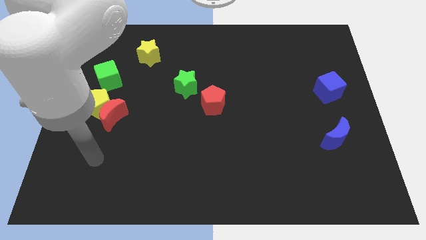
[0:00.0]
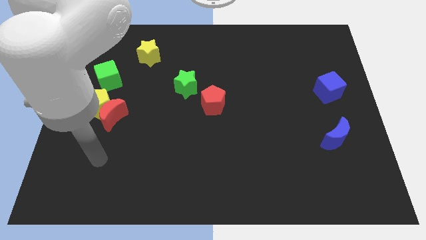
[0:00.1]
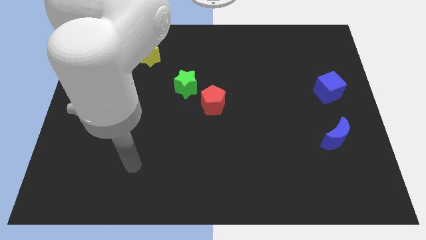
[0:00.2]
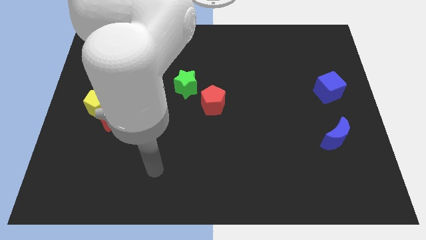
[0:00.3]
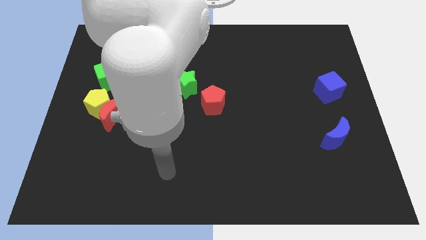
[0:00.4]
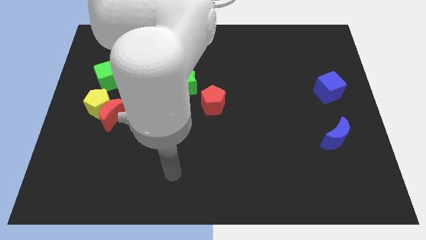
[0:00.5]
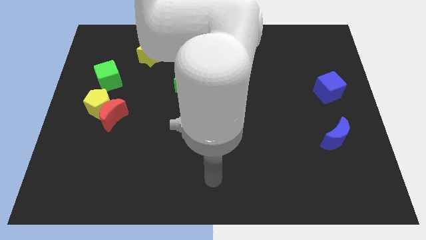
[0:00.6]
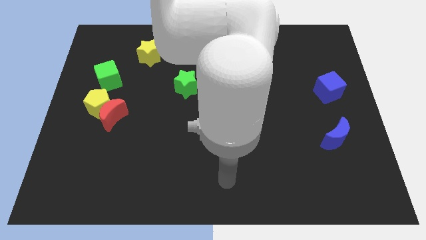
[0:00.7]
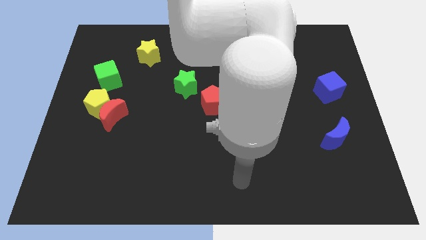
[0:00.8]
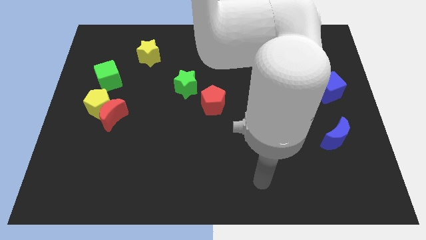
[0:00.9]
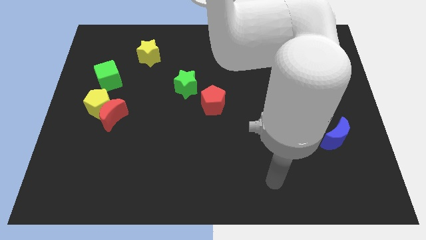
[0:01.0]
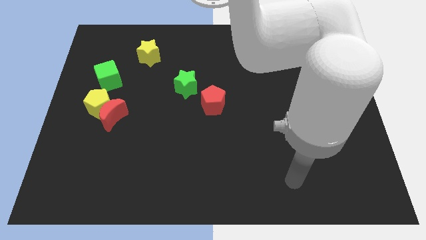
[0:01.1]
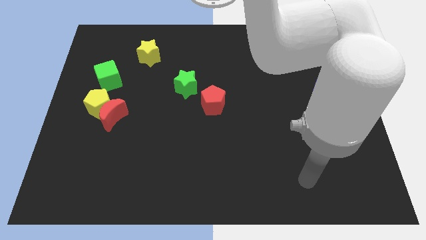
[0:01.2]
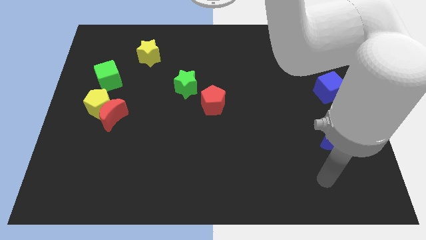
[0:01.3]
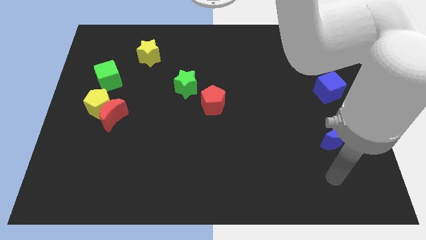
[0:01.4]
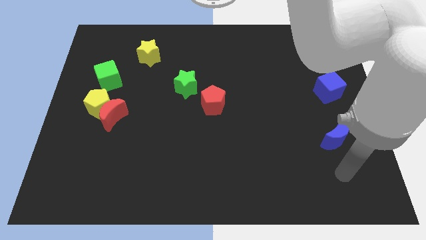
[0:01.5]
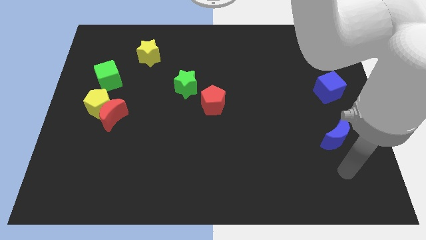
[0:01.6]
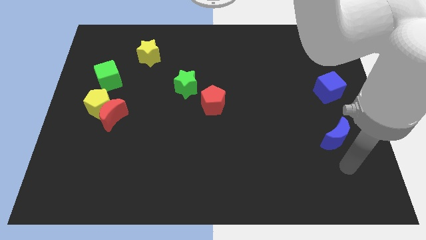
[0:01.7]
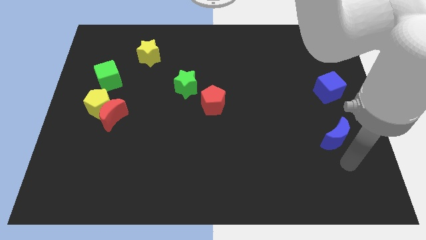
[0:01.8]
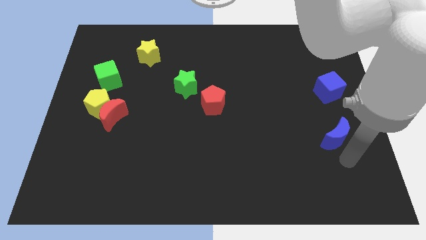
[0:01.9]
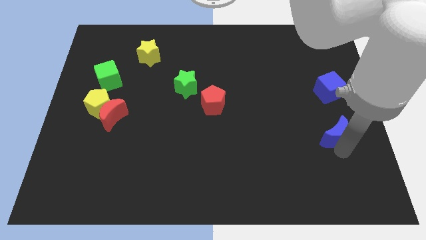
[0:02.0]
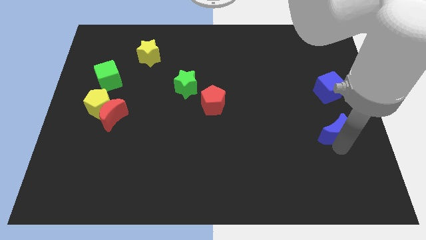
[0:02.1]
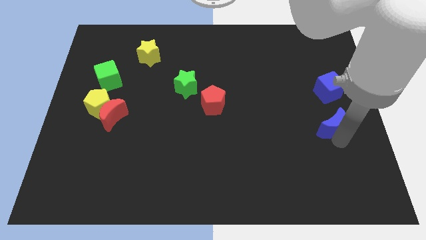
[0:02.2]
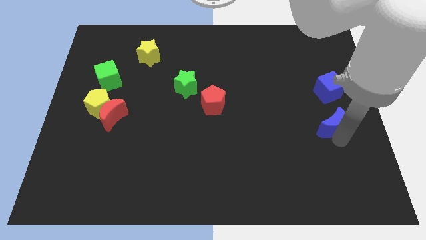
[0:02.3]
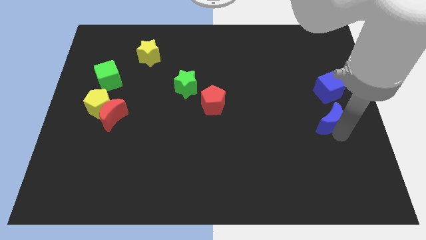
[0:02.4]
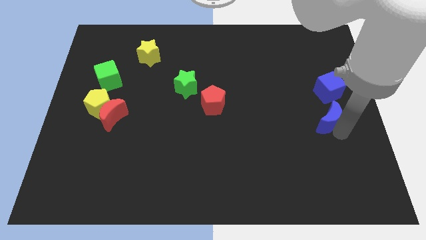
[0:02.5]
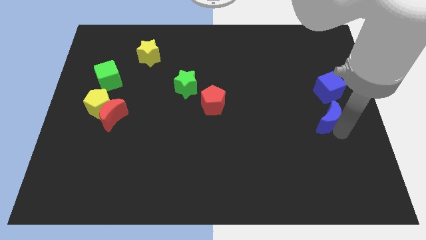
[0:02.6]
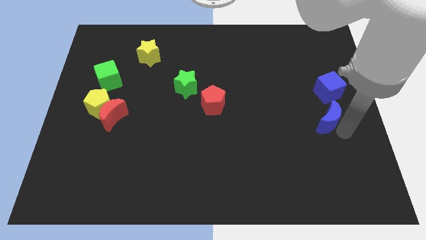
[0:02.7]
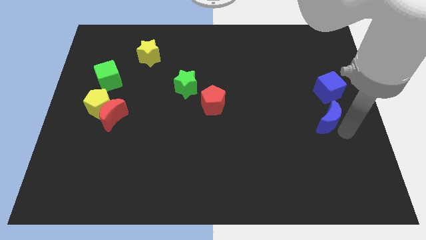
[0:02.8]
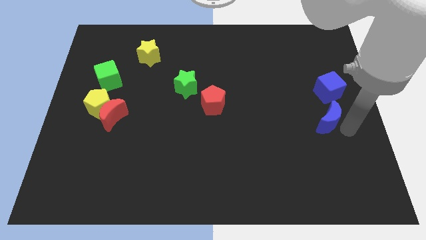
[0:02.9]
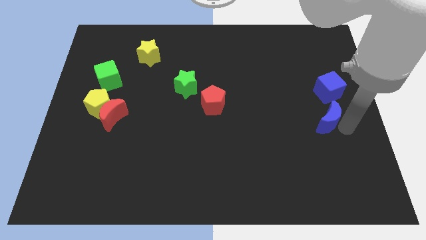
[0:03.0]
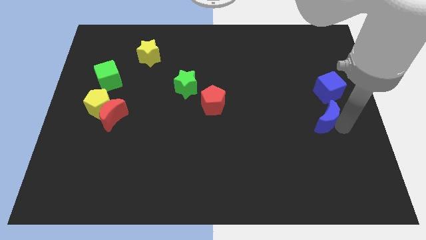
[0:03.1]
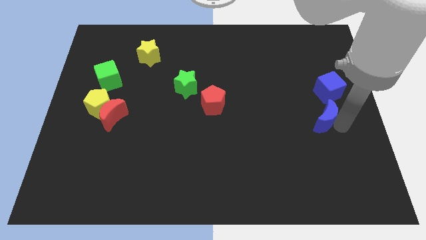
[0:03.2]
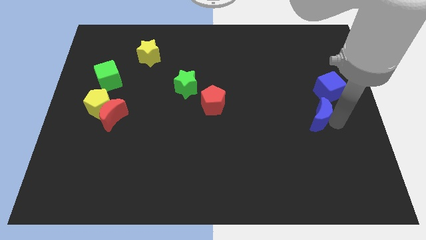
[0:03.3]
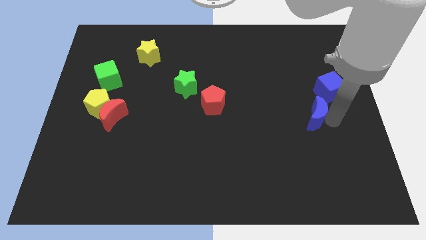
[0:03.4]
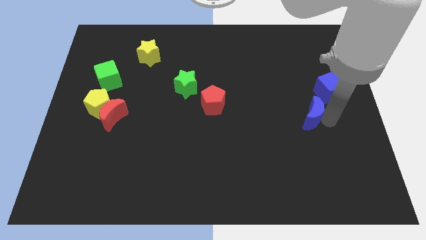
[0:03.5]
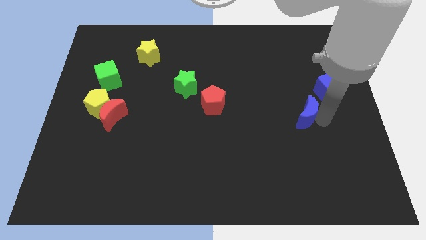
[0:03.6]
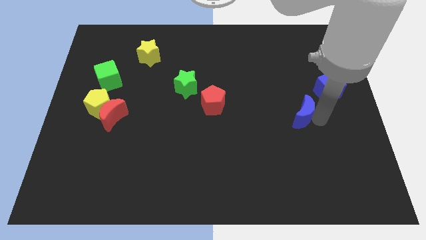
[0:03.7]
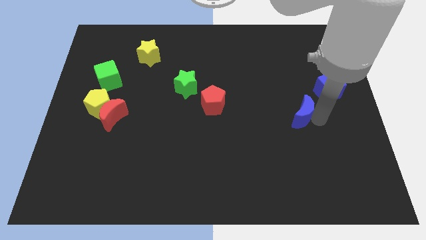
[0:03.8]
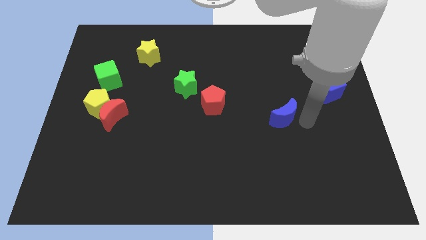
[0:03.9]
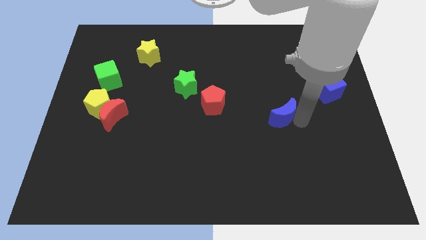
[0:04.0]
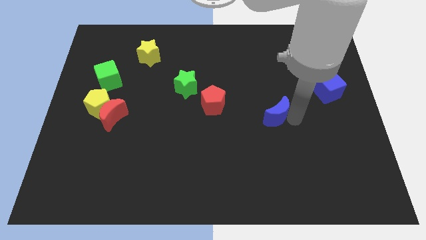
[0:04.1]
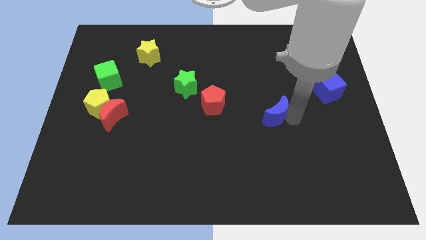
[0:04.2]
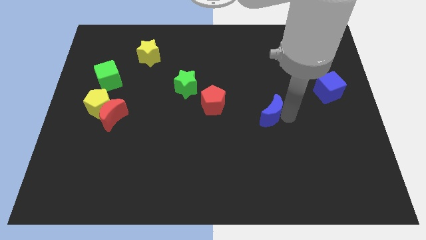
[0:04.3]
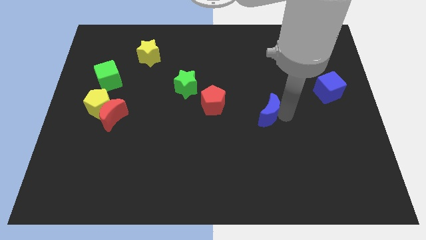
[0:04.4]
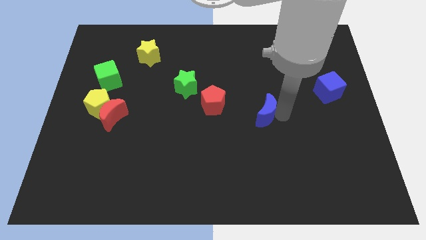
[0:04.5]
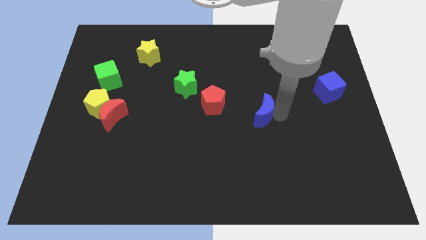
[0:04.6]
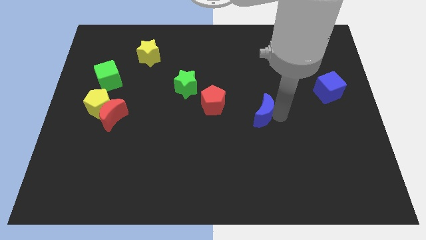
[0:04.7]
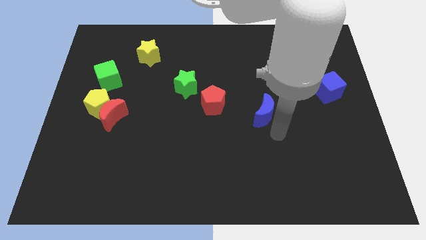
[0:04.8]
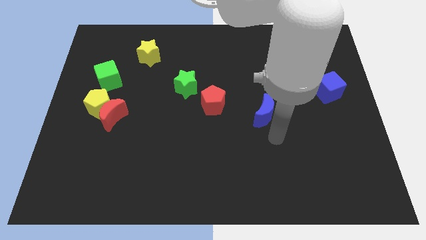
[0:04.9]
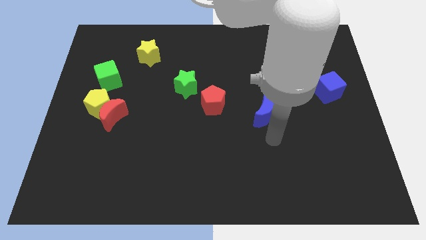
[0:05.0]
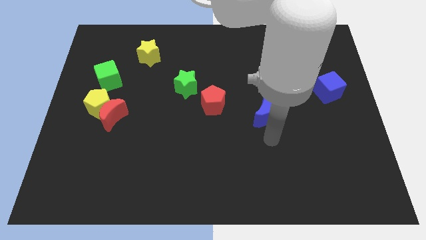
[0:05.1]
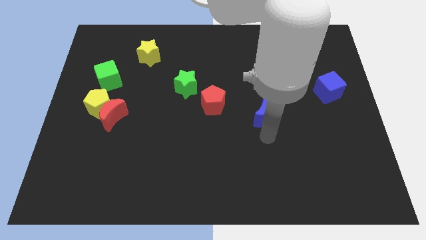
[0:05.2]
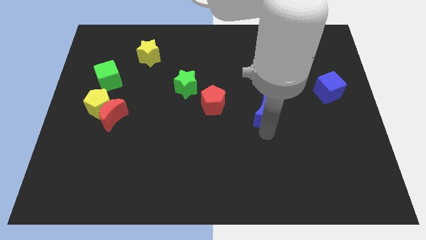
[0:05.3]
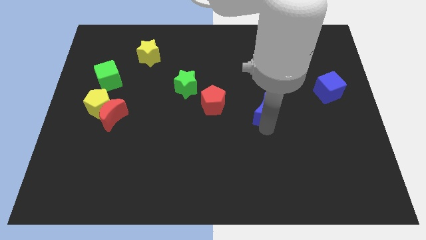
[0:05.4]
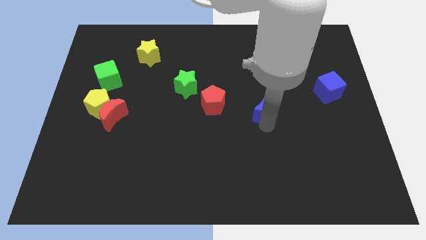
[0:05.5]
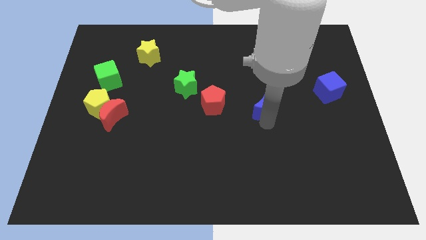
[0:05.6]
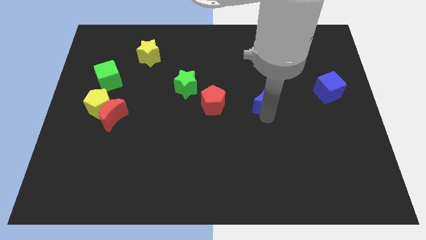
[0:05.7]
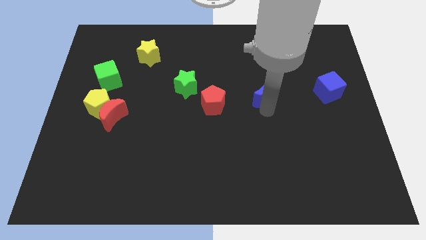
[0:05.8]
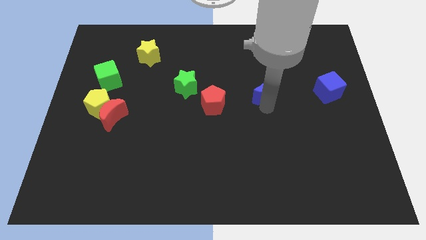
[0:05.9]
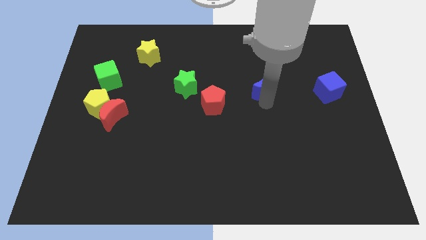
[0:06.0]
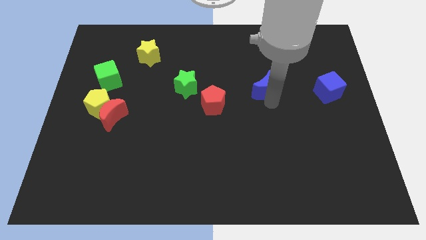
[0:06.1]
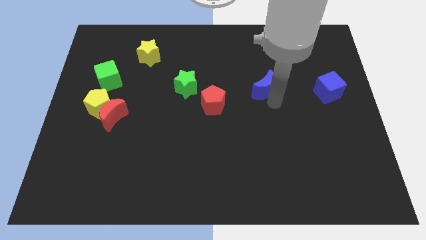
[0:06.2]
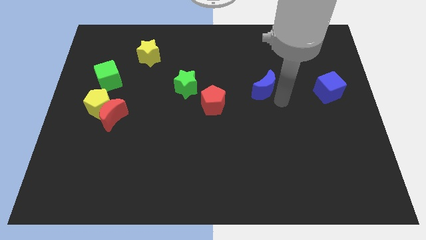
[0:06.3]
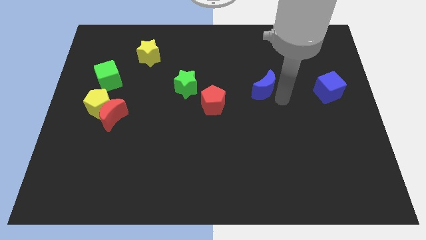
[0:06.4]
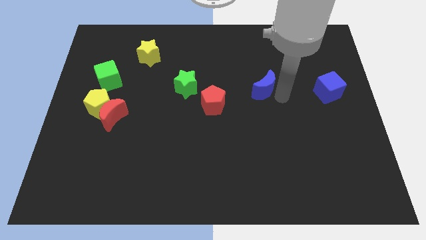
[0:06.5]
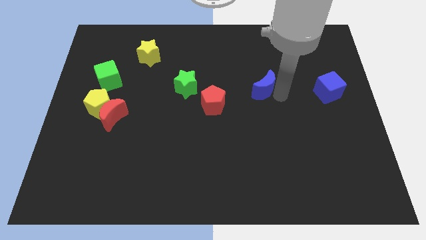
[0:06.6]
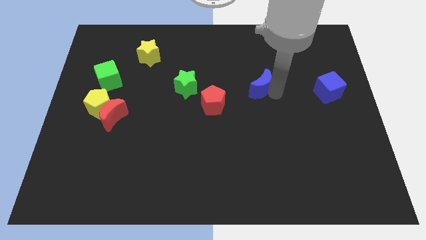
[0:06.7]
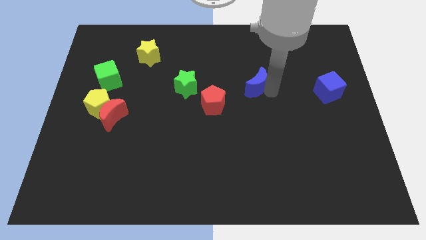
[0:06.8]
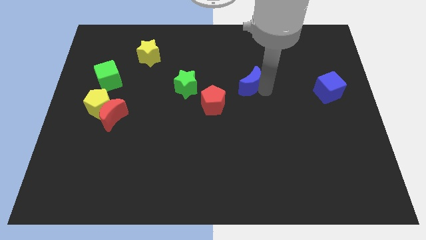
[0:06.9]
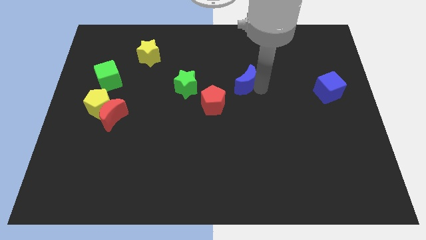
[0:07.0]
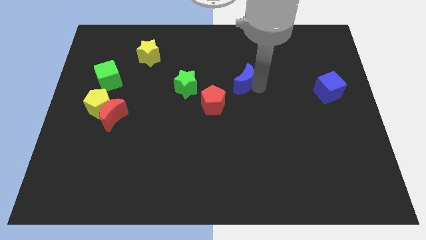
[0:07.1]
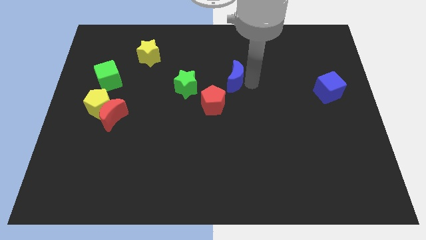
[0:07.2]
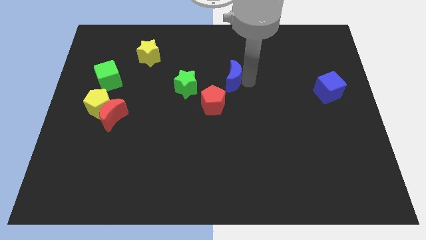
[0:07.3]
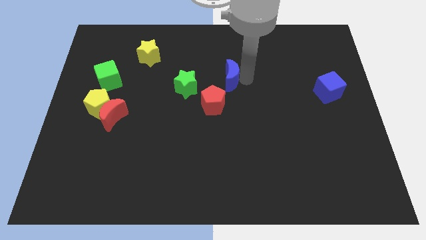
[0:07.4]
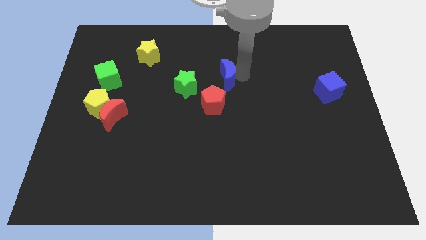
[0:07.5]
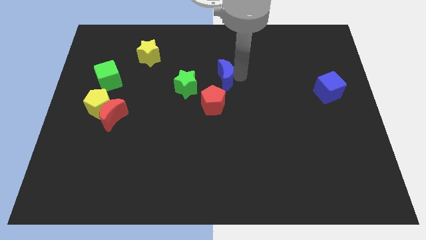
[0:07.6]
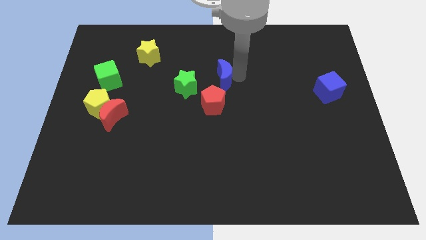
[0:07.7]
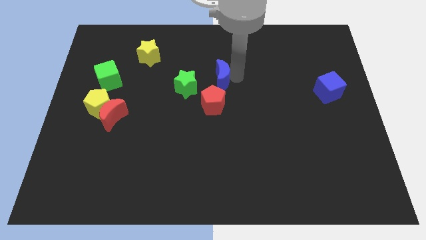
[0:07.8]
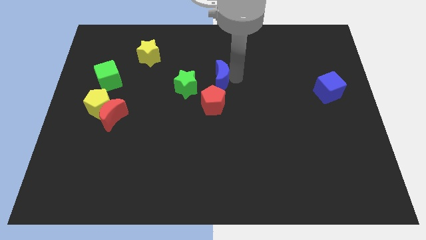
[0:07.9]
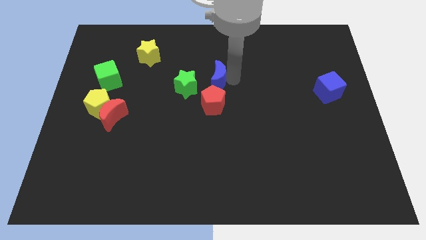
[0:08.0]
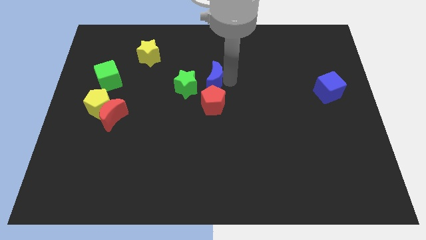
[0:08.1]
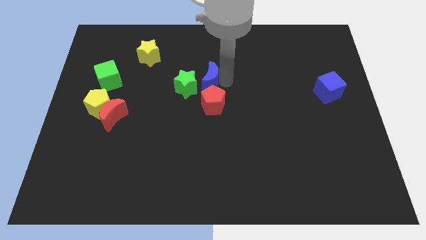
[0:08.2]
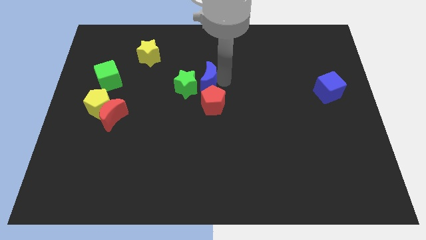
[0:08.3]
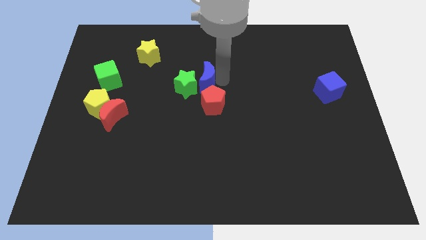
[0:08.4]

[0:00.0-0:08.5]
move the blue moon towards the green star
